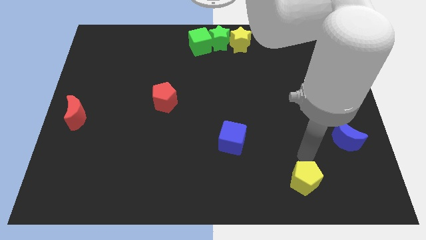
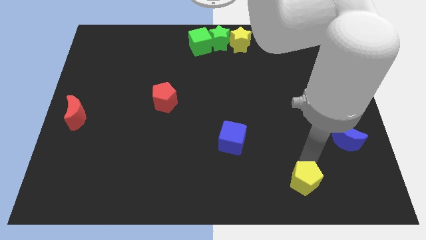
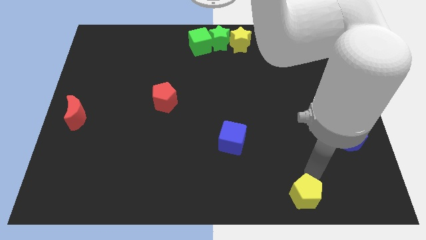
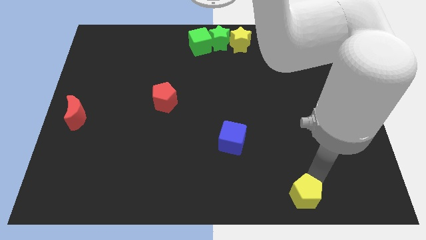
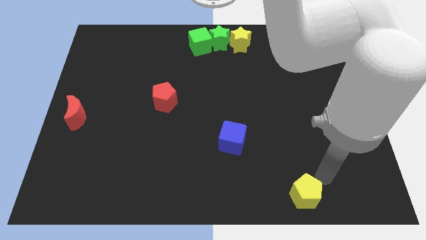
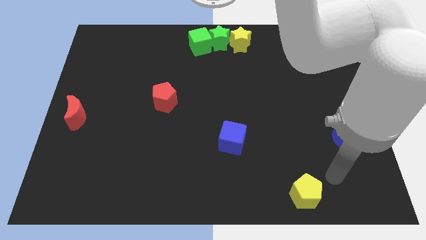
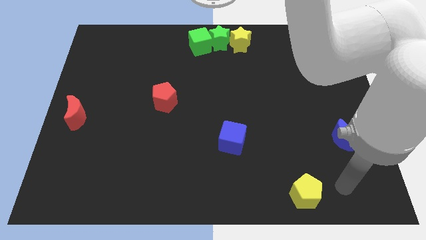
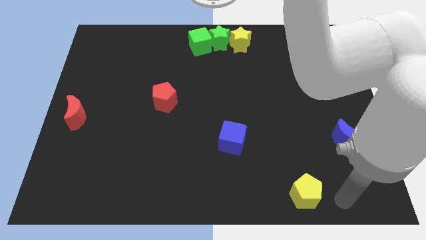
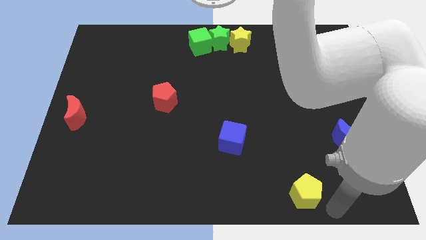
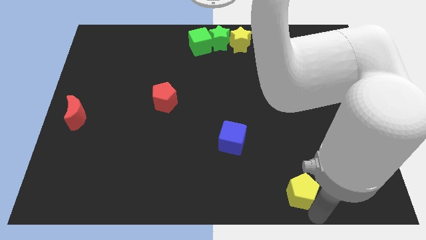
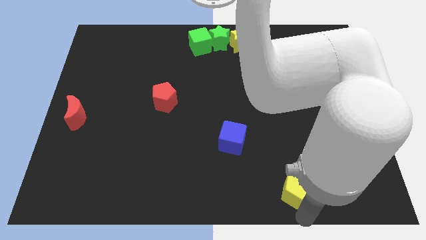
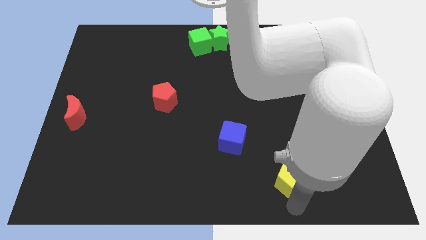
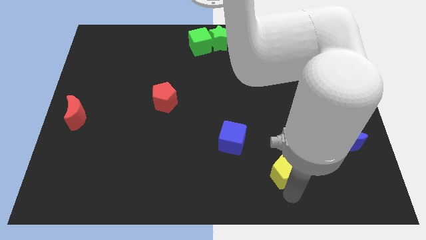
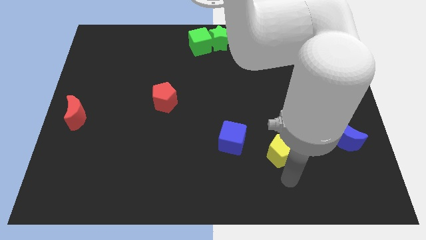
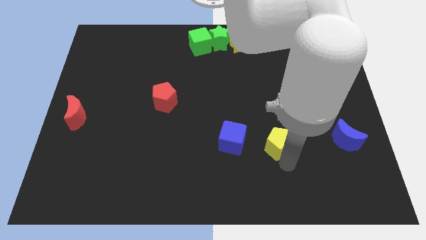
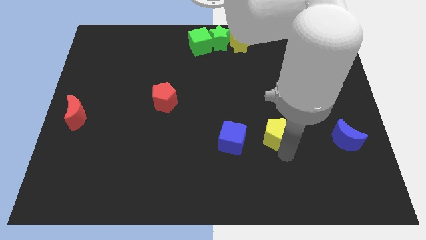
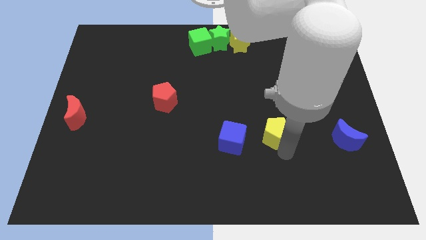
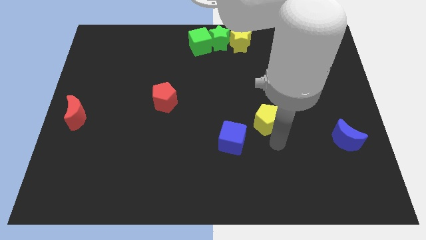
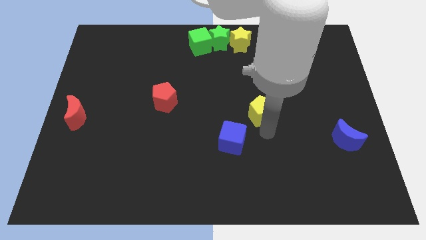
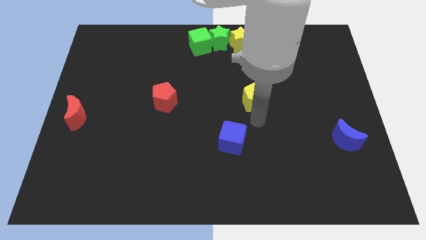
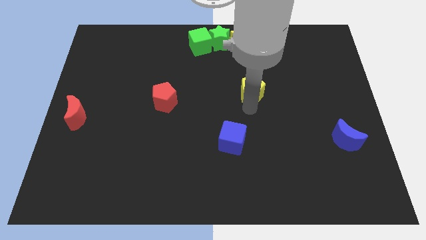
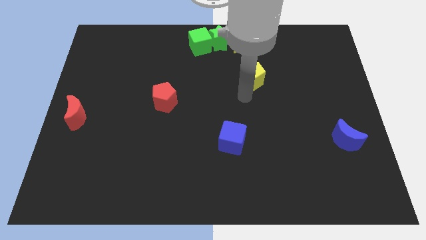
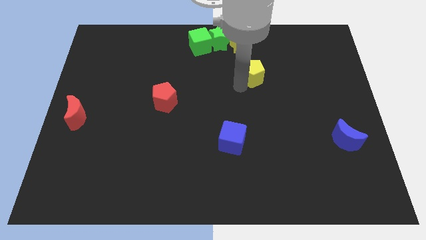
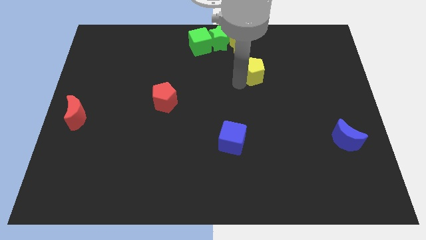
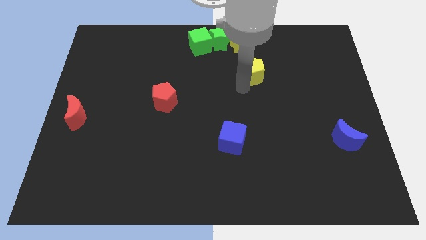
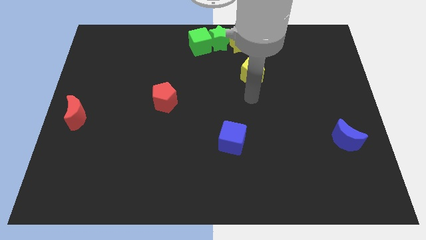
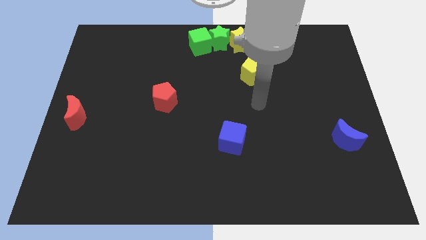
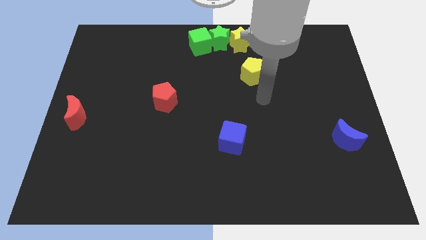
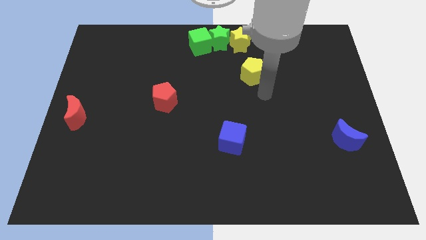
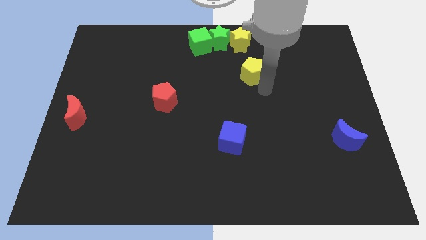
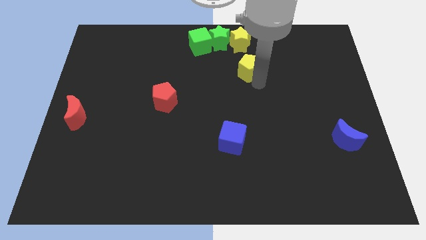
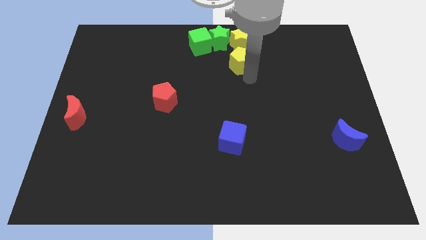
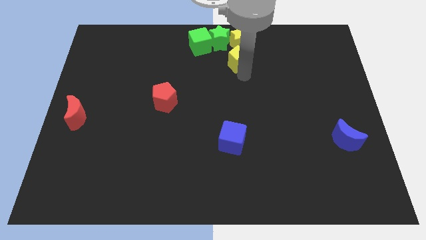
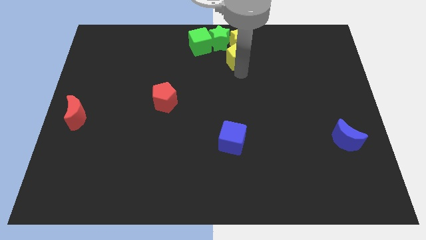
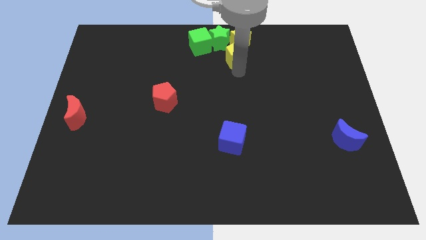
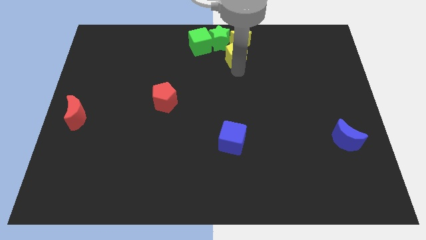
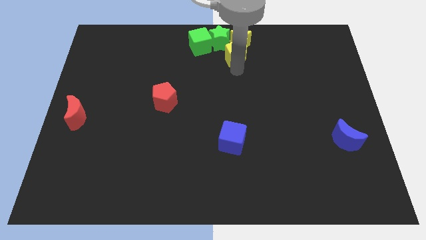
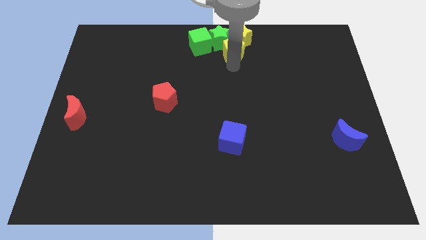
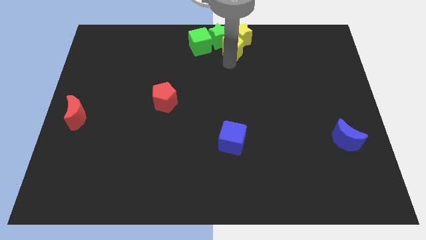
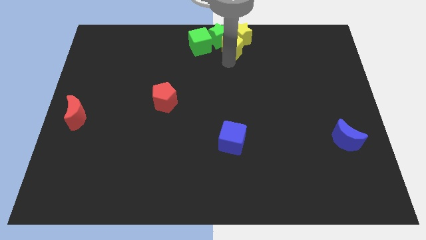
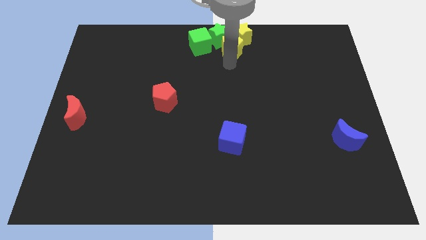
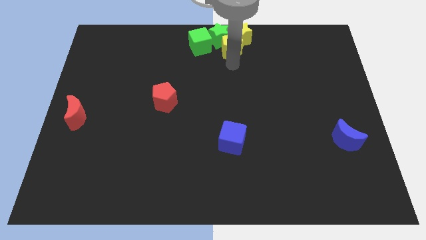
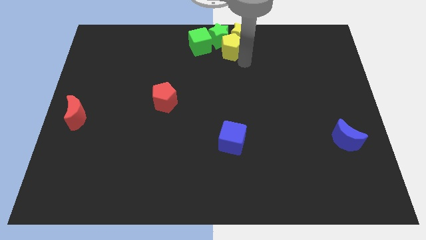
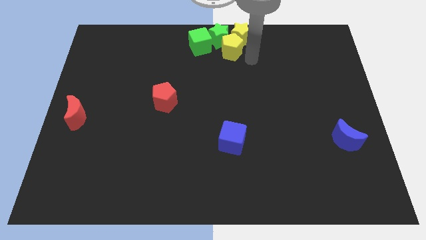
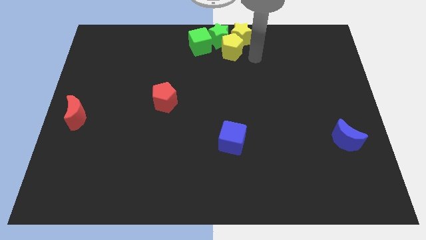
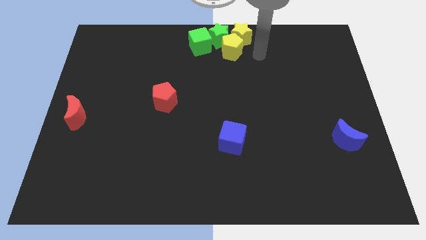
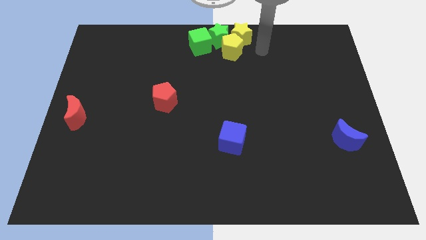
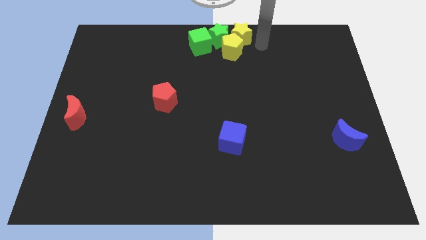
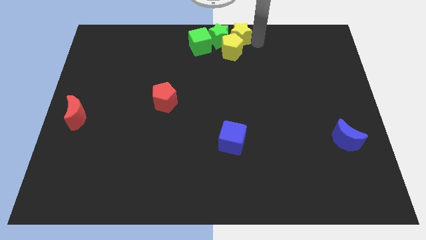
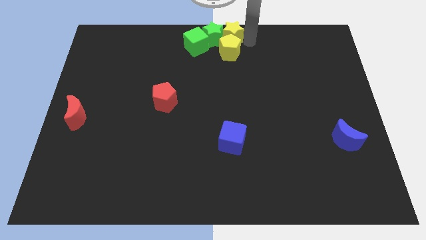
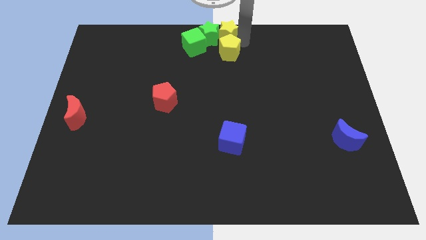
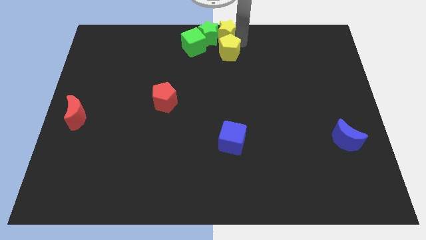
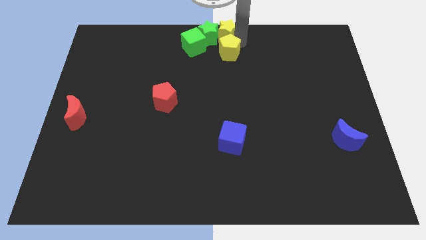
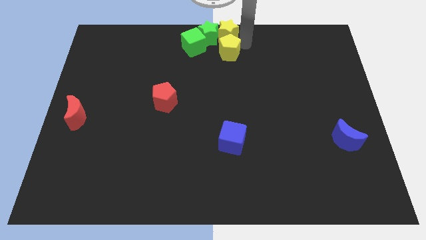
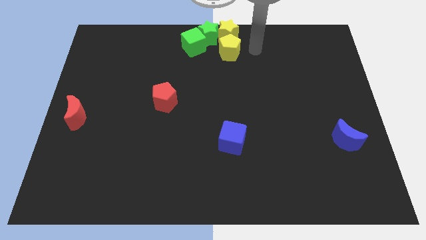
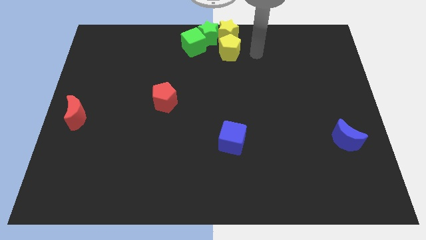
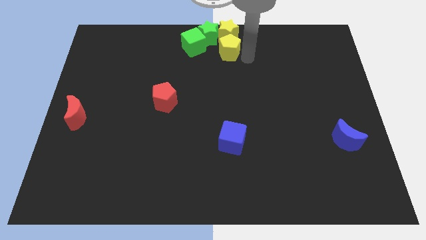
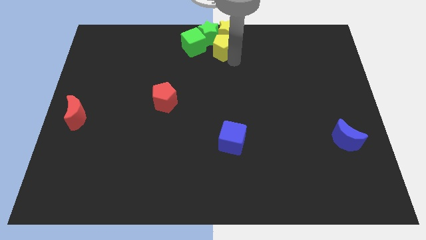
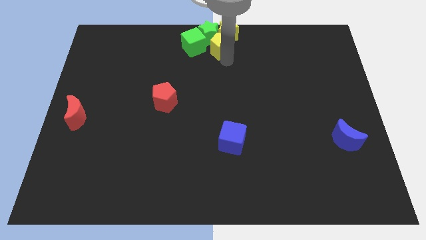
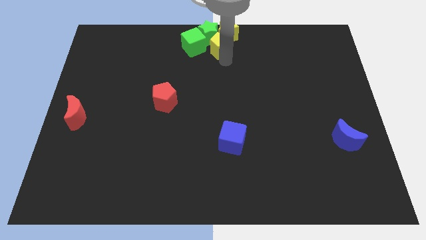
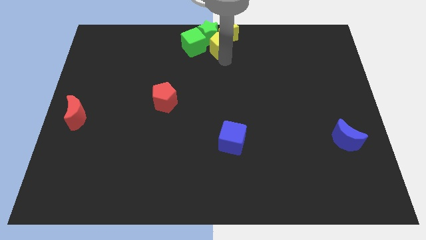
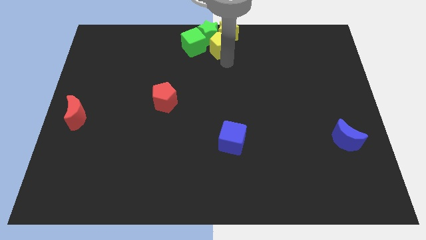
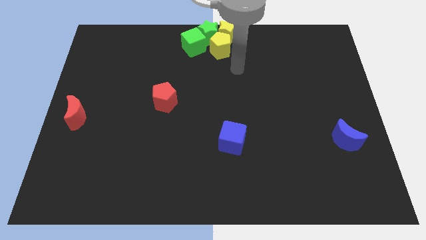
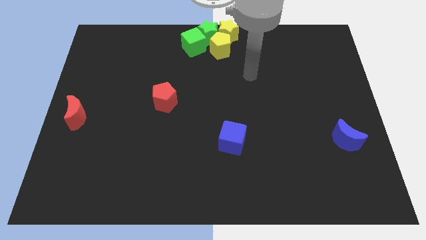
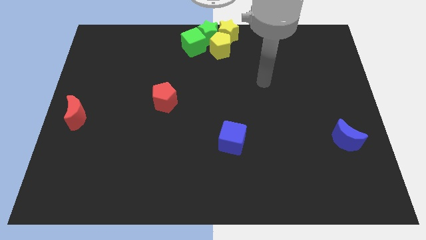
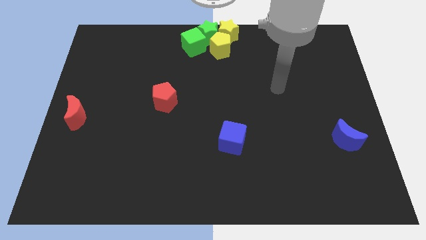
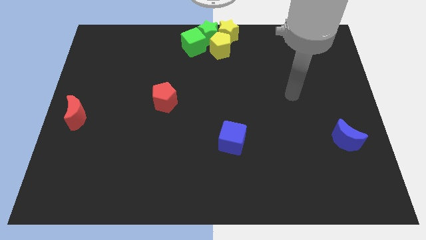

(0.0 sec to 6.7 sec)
place the yellow pentagon to the top center of the board

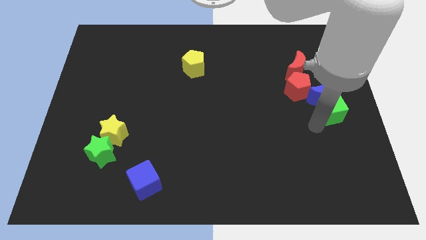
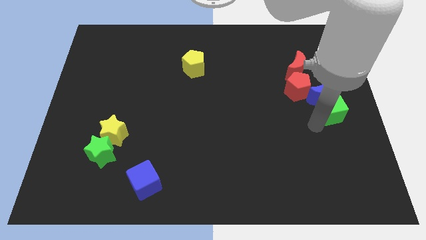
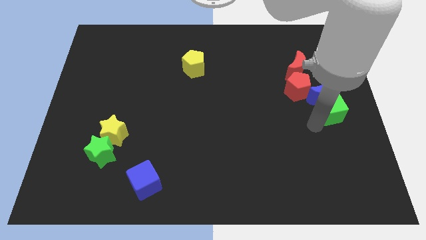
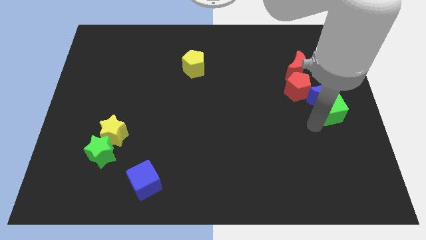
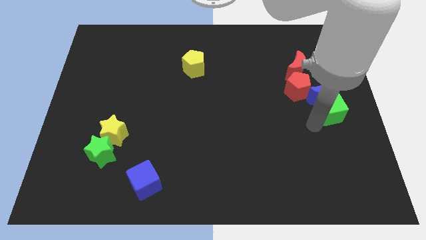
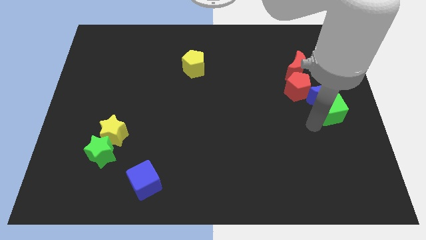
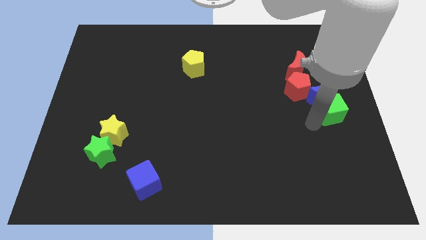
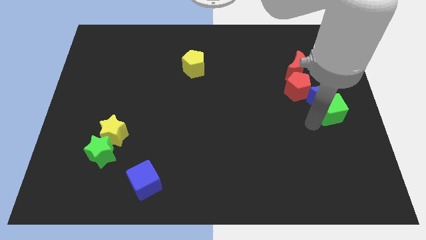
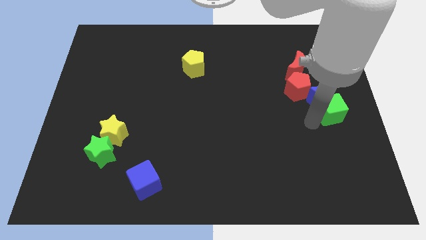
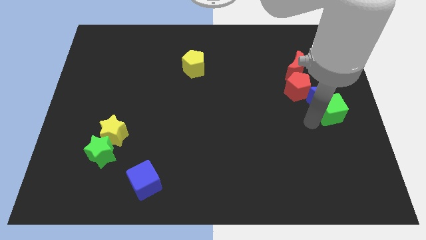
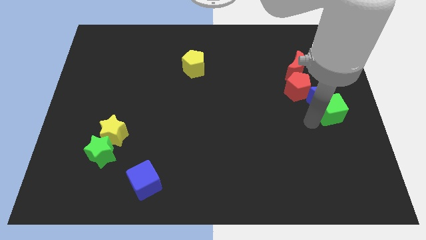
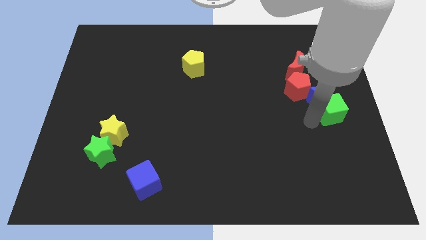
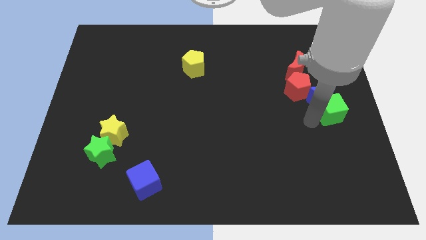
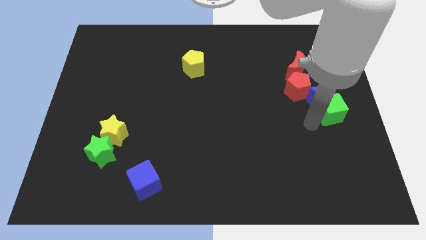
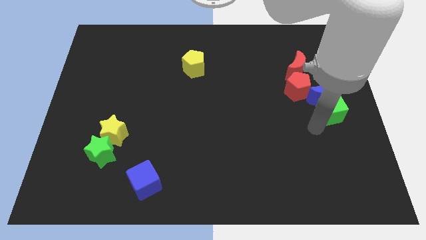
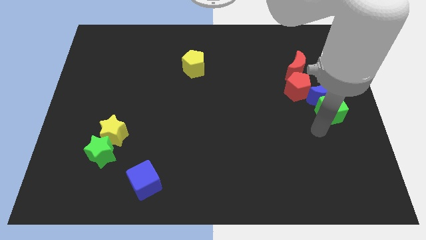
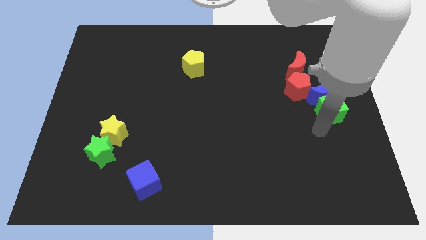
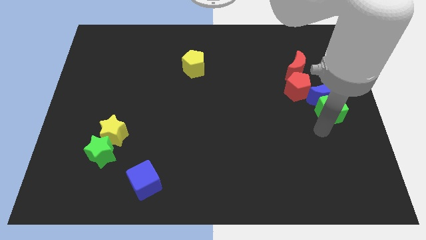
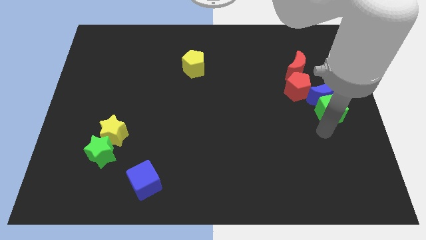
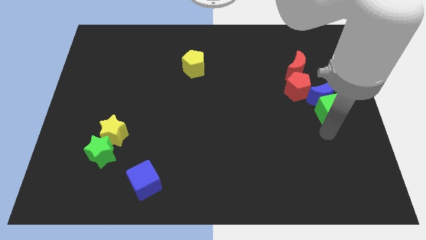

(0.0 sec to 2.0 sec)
move your arm below the green cube

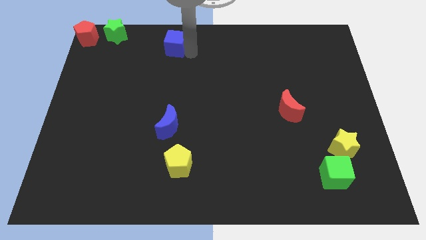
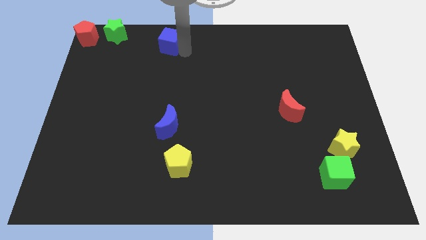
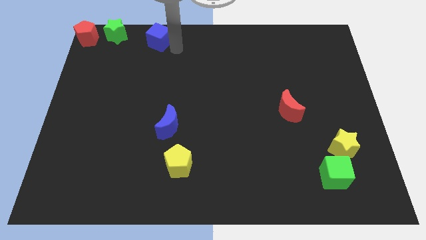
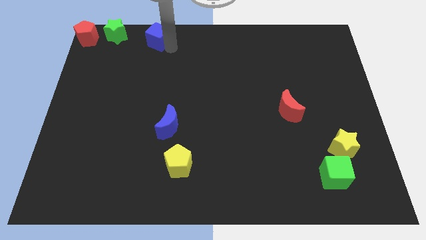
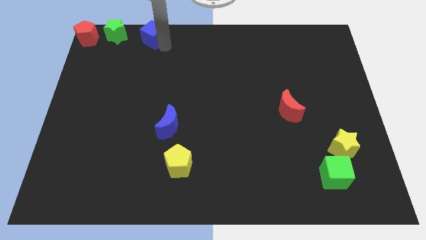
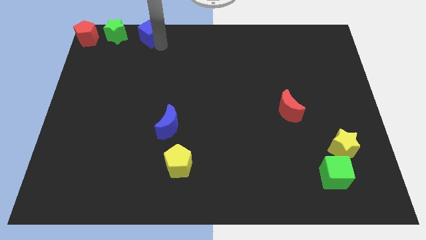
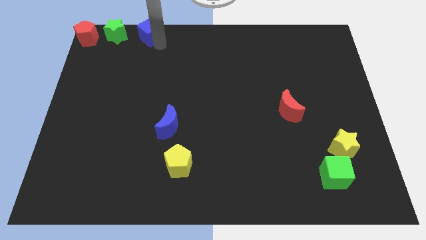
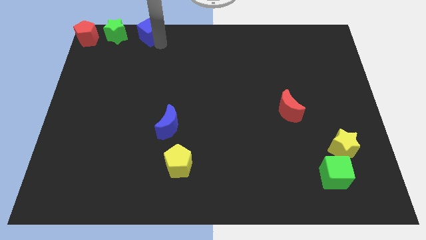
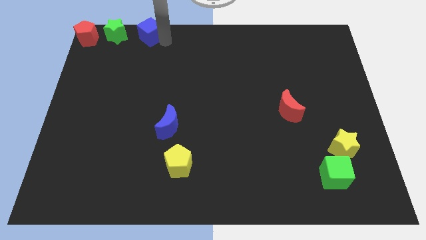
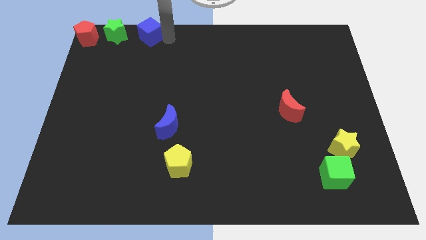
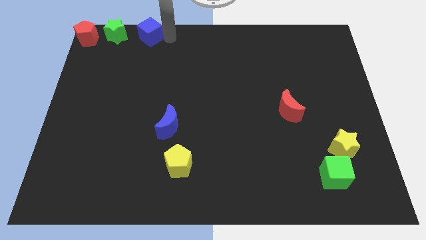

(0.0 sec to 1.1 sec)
push the blue cube towards the top left corner of the board
